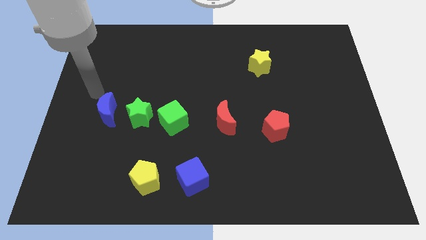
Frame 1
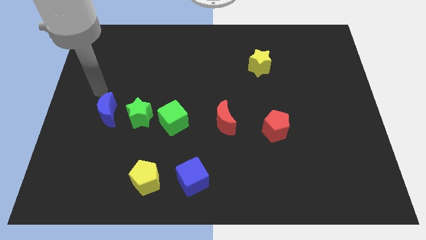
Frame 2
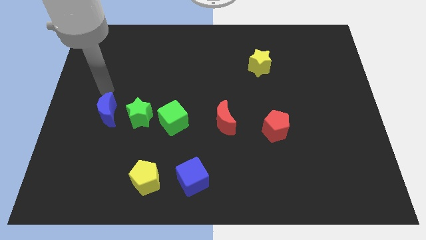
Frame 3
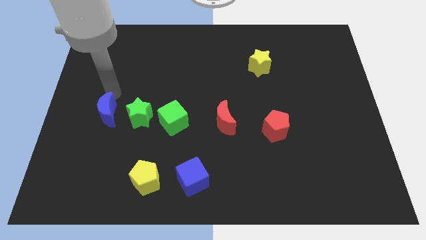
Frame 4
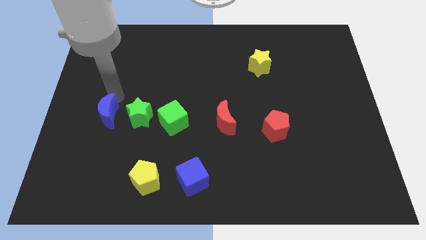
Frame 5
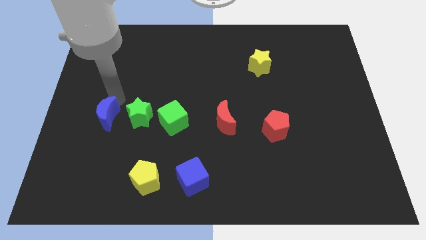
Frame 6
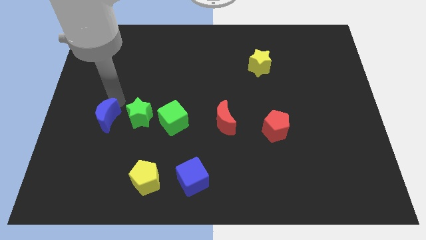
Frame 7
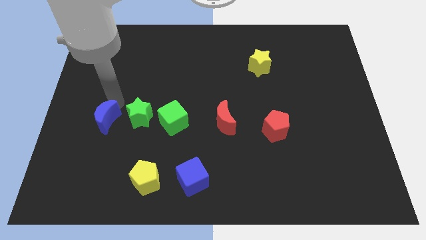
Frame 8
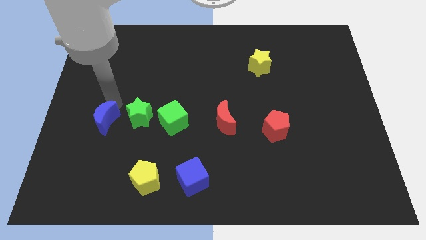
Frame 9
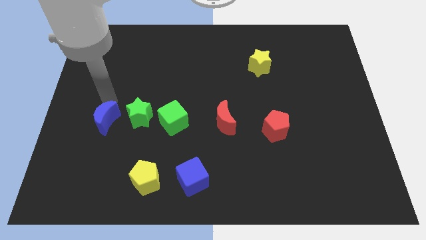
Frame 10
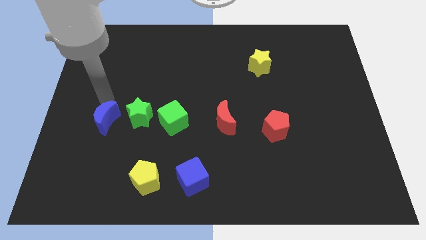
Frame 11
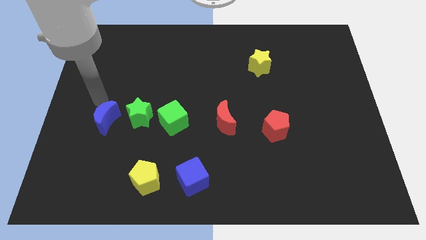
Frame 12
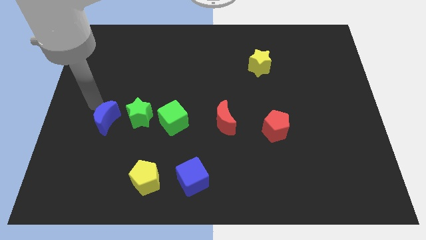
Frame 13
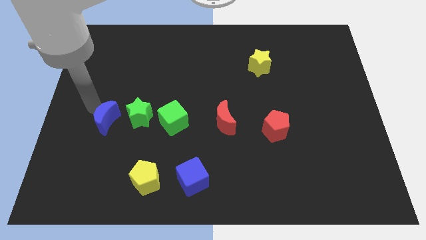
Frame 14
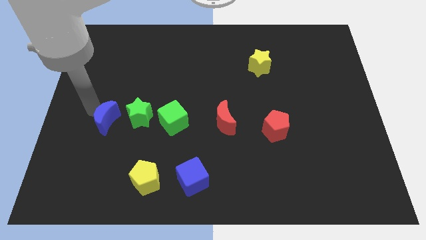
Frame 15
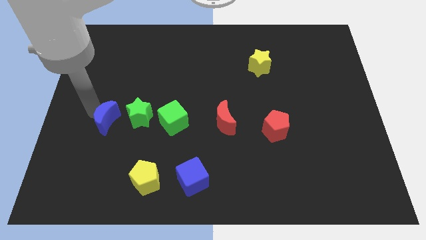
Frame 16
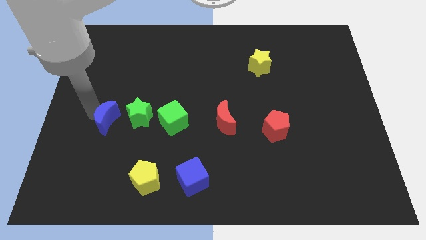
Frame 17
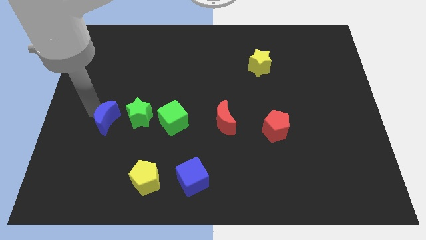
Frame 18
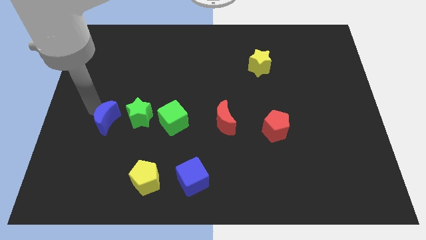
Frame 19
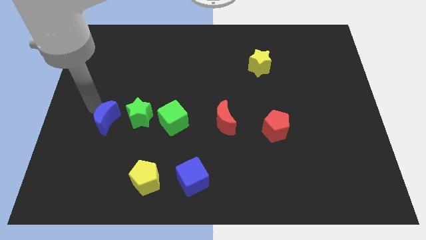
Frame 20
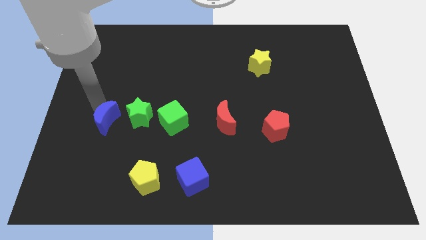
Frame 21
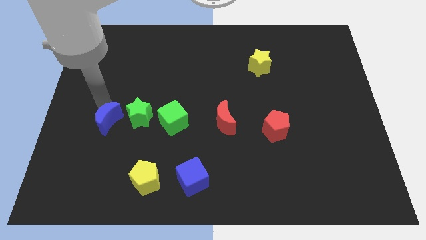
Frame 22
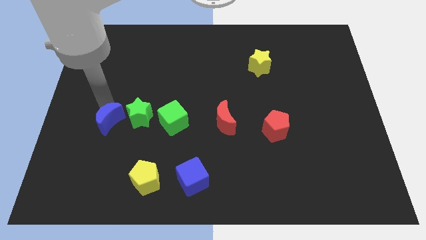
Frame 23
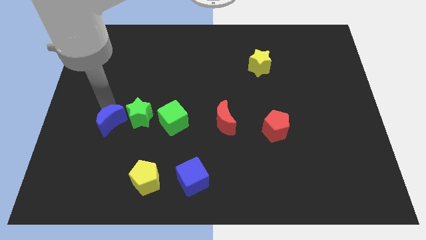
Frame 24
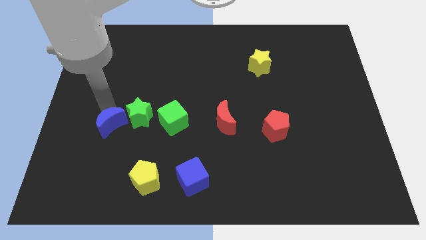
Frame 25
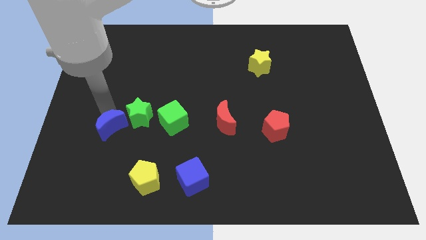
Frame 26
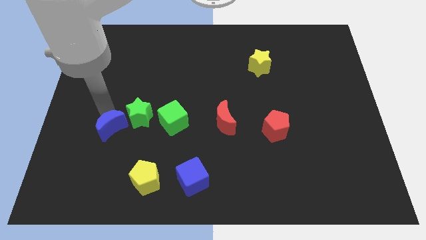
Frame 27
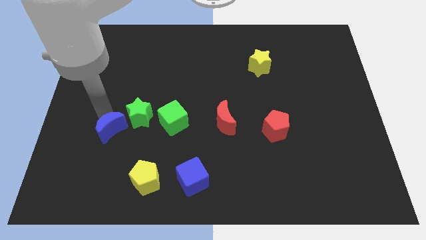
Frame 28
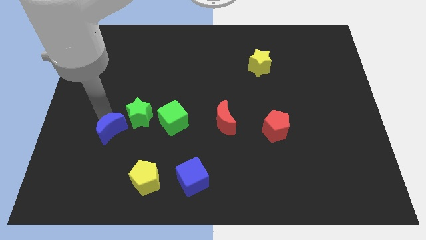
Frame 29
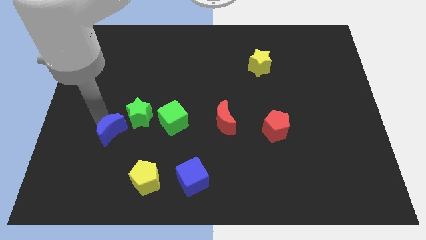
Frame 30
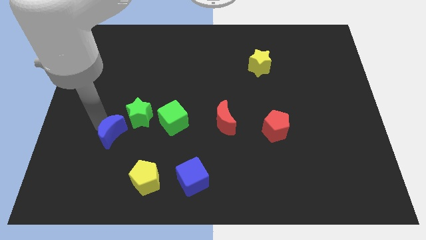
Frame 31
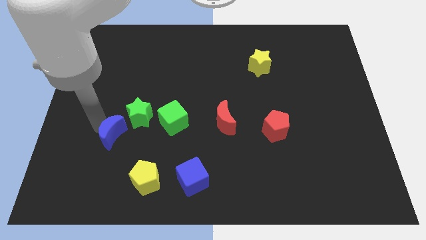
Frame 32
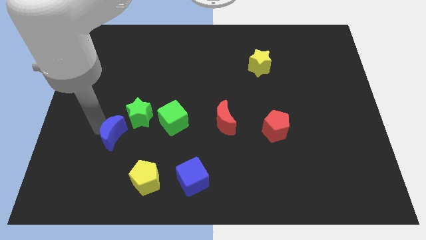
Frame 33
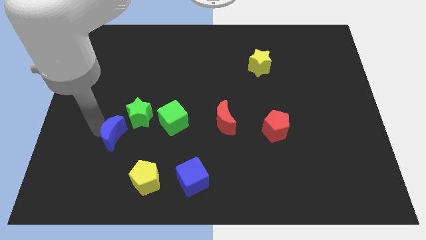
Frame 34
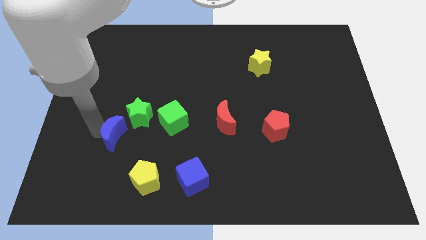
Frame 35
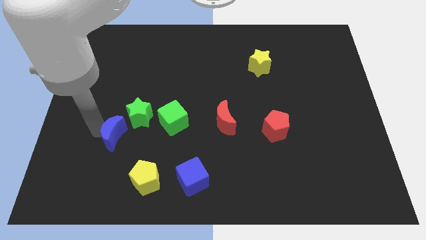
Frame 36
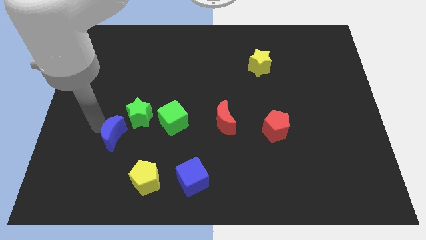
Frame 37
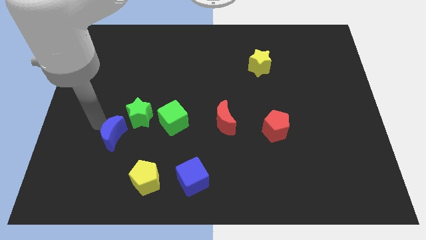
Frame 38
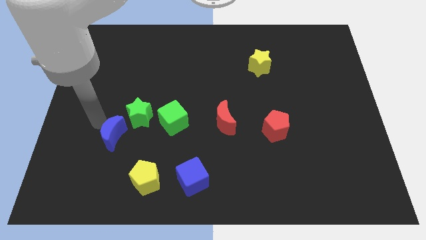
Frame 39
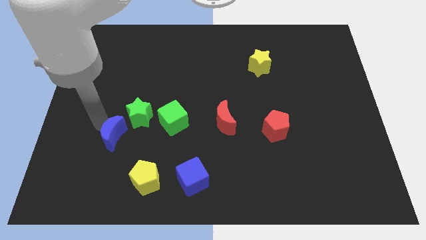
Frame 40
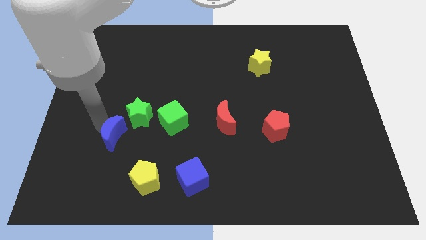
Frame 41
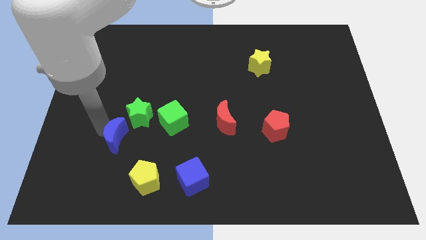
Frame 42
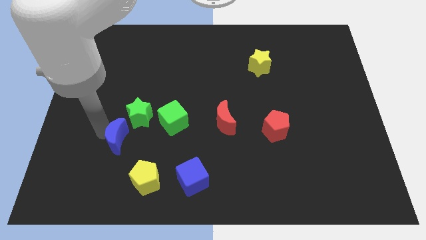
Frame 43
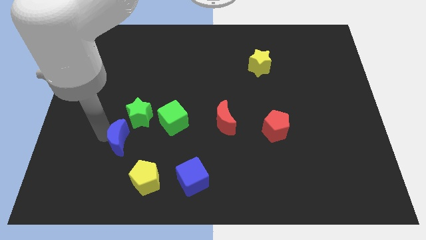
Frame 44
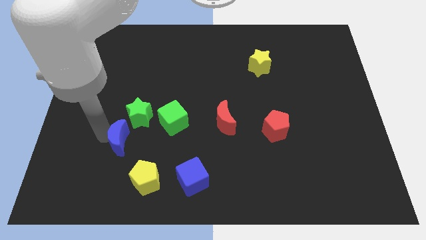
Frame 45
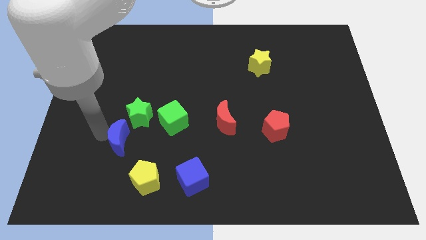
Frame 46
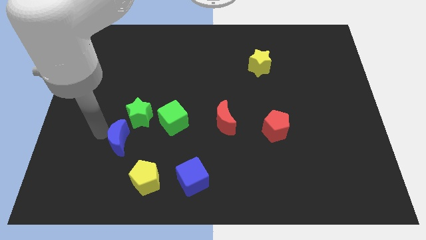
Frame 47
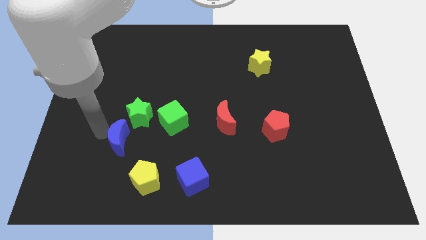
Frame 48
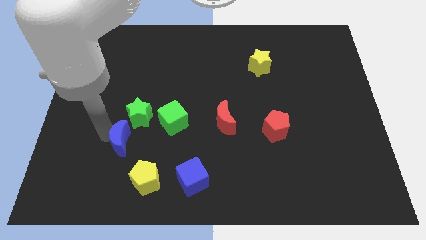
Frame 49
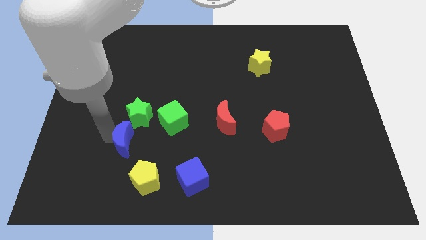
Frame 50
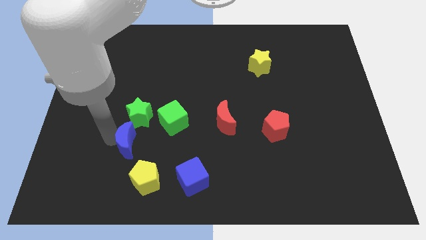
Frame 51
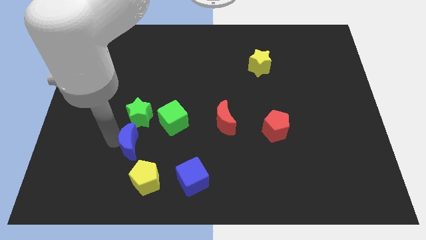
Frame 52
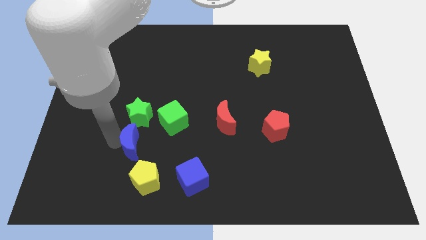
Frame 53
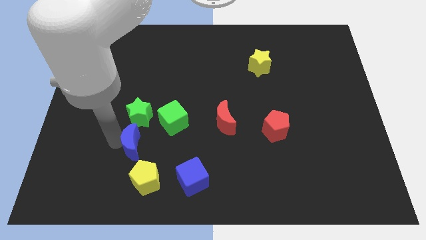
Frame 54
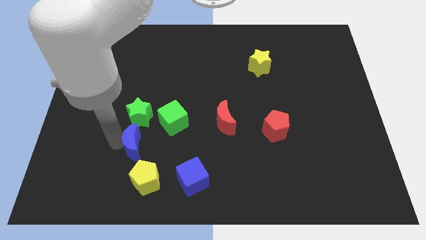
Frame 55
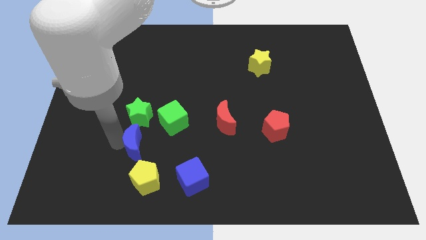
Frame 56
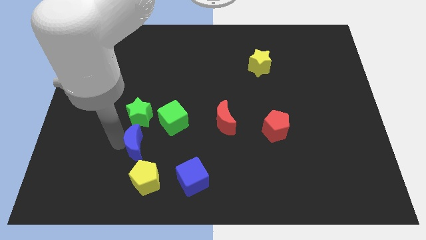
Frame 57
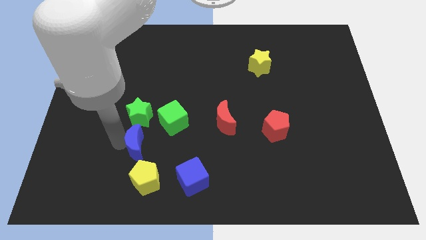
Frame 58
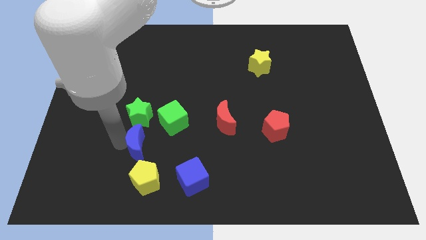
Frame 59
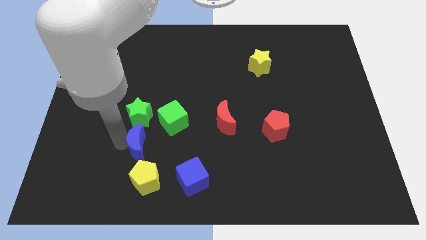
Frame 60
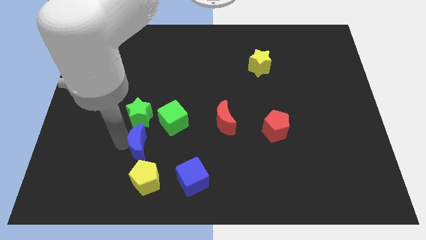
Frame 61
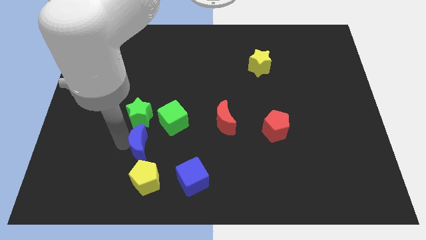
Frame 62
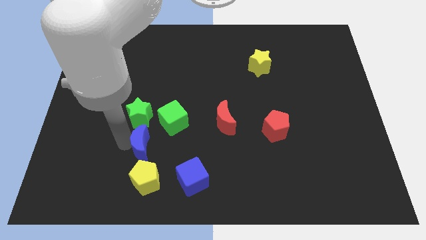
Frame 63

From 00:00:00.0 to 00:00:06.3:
place blue moon between green star and yellow pentagon

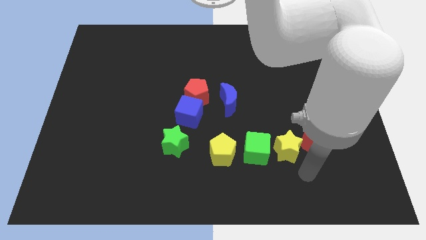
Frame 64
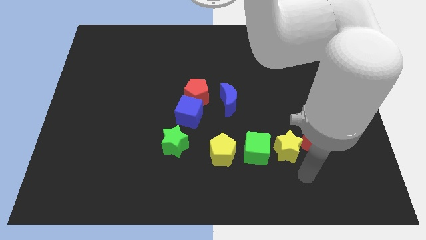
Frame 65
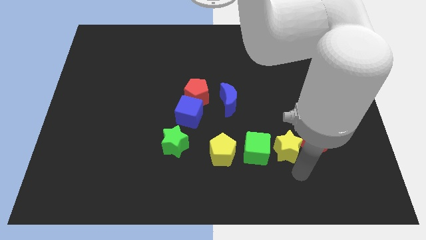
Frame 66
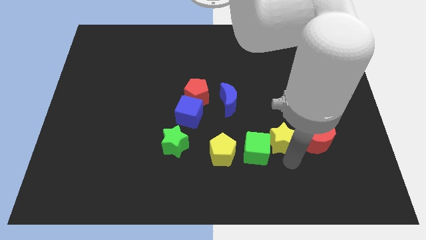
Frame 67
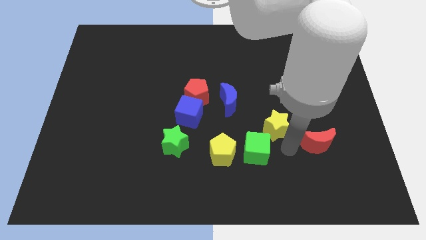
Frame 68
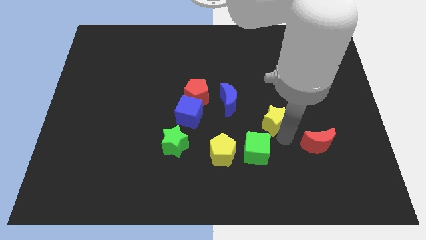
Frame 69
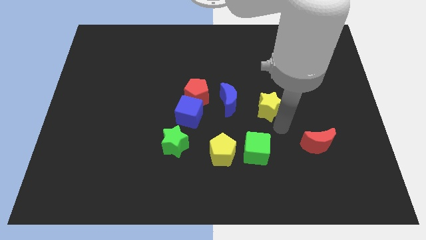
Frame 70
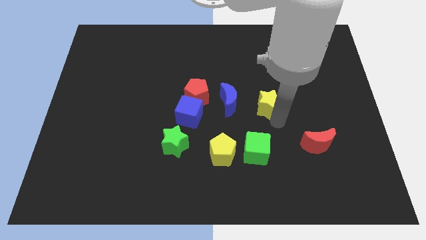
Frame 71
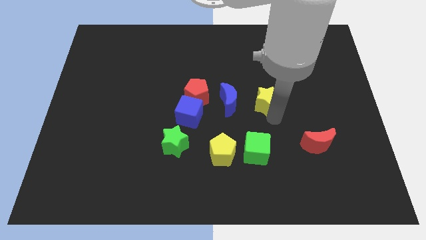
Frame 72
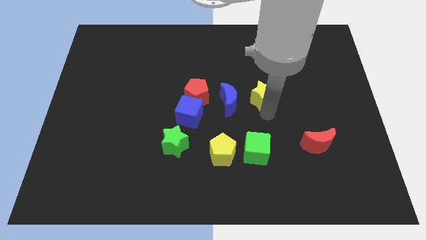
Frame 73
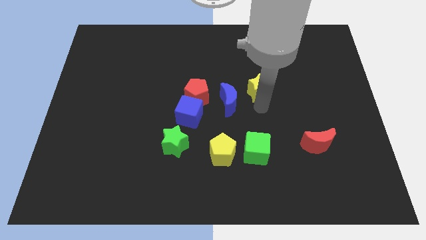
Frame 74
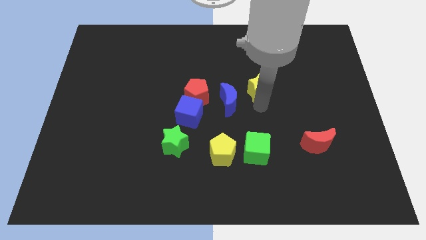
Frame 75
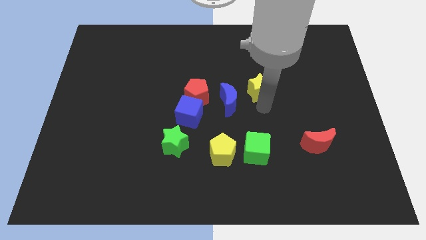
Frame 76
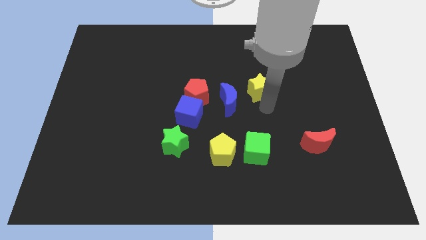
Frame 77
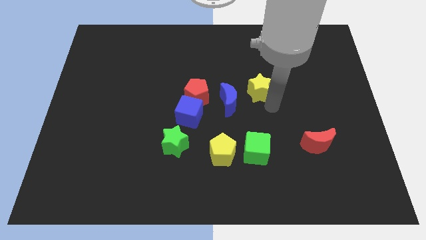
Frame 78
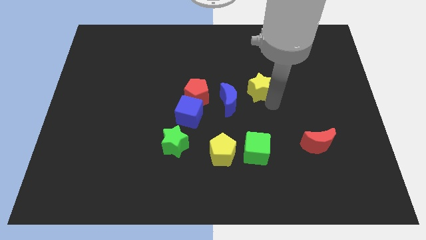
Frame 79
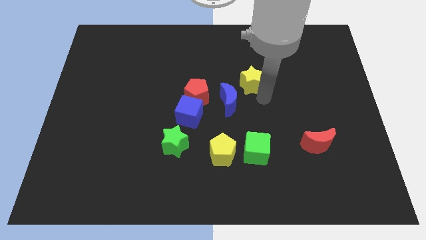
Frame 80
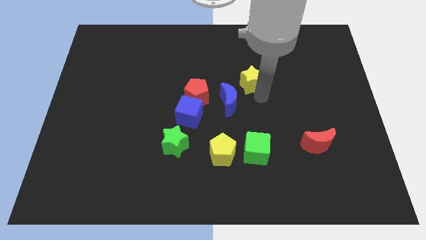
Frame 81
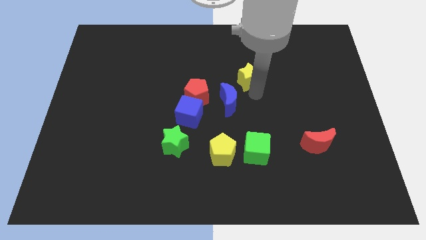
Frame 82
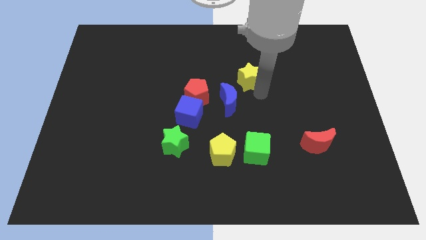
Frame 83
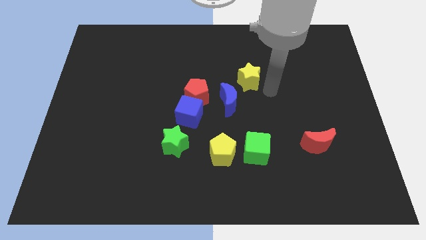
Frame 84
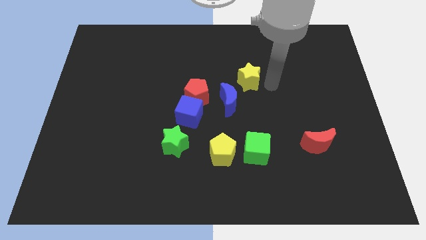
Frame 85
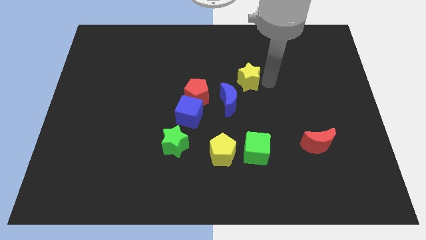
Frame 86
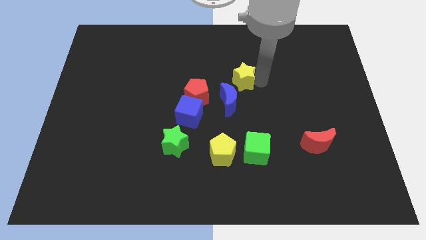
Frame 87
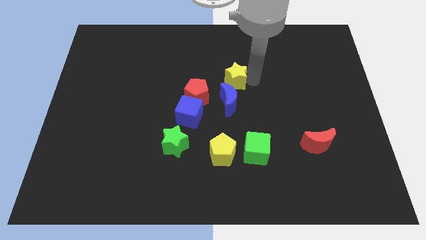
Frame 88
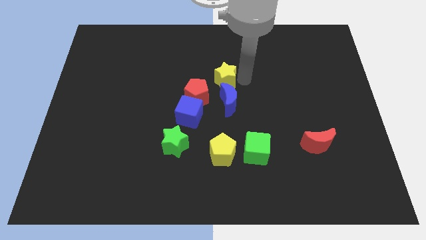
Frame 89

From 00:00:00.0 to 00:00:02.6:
move the yellow star at the top of the blue moon

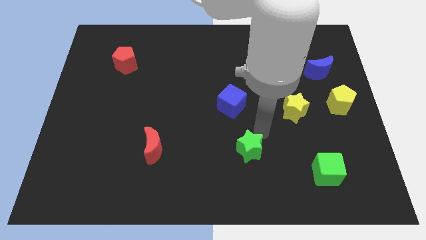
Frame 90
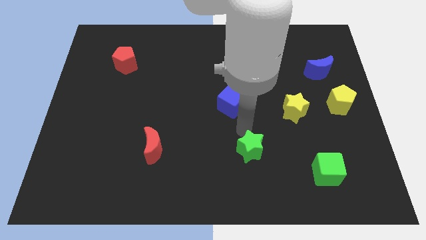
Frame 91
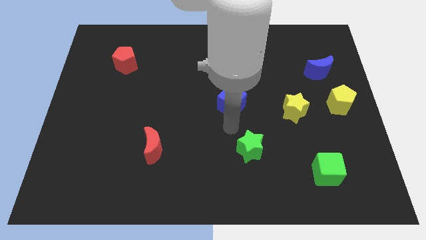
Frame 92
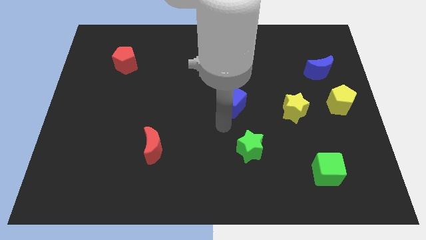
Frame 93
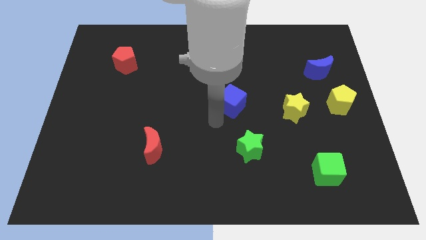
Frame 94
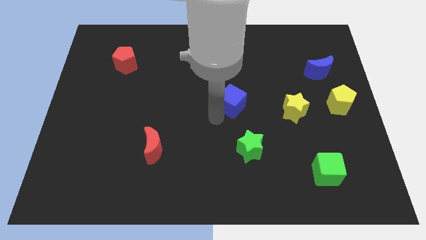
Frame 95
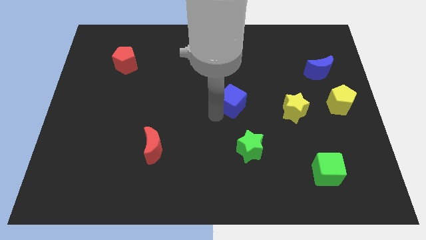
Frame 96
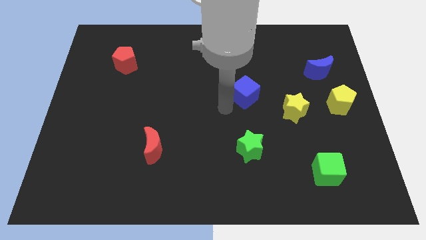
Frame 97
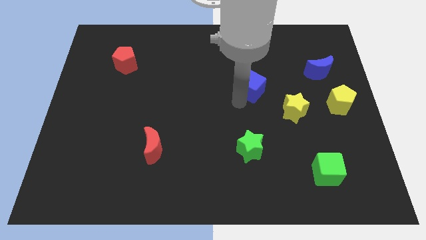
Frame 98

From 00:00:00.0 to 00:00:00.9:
push blue cube above green star
